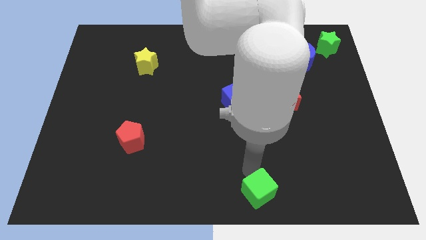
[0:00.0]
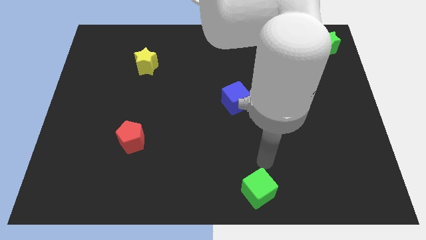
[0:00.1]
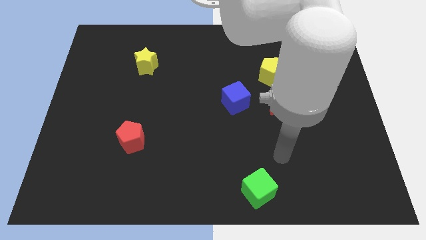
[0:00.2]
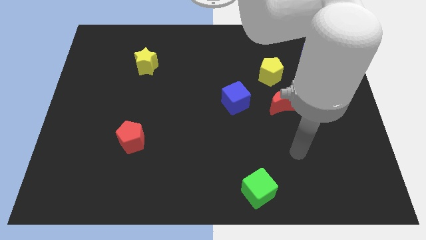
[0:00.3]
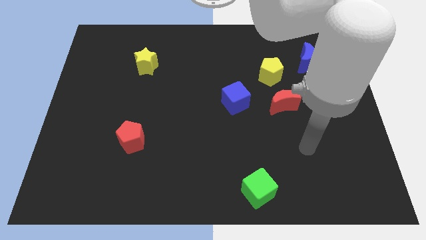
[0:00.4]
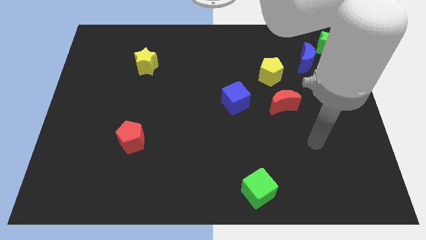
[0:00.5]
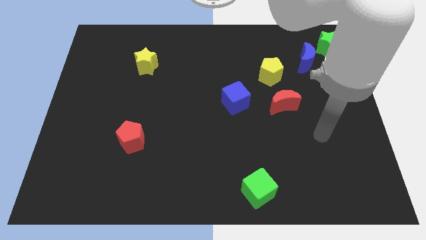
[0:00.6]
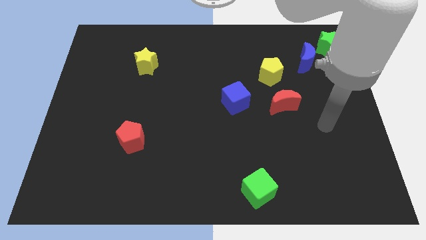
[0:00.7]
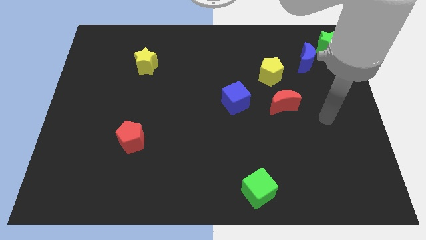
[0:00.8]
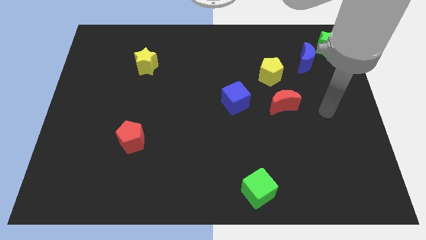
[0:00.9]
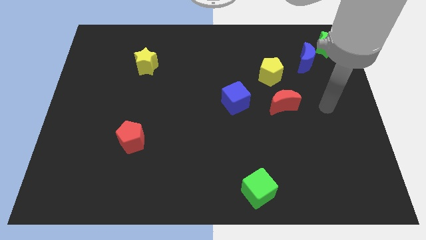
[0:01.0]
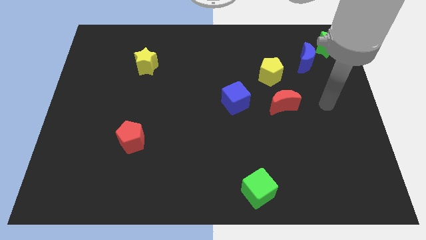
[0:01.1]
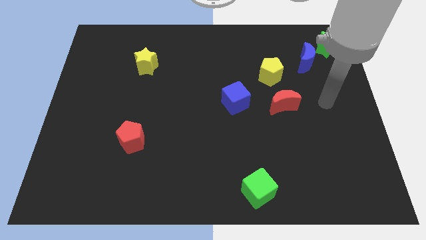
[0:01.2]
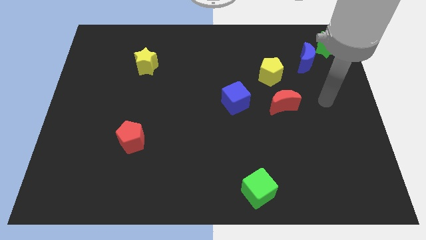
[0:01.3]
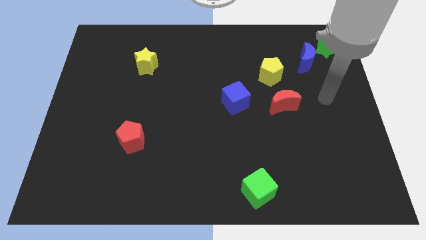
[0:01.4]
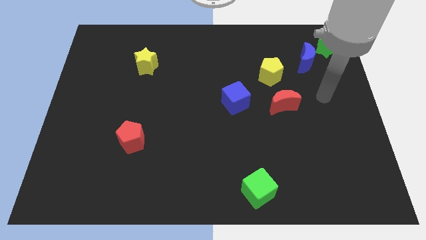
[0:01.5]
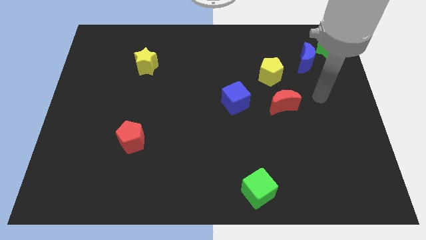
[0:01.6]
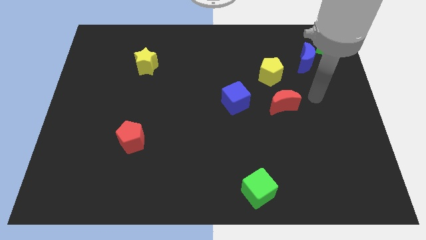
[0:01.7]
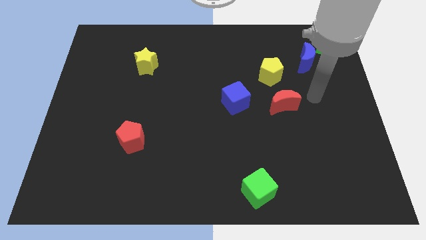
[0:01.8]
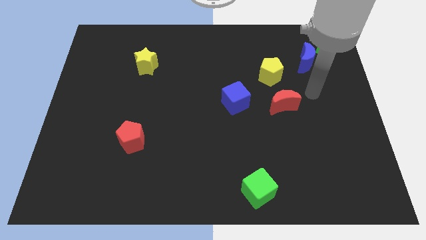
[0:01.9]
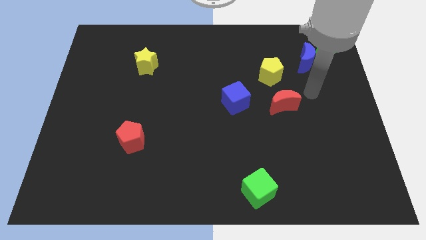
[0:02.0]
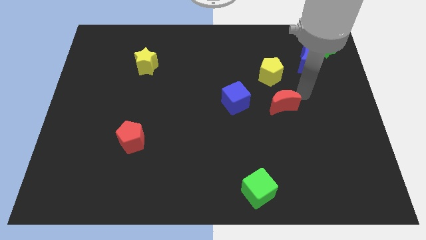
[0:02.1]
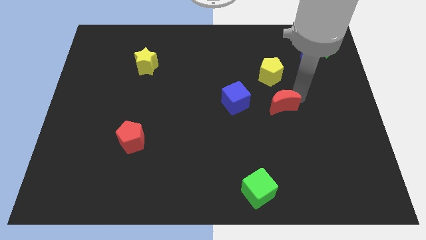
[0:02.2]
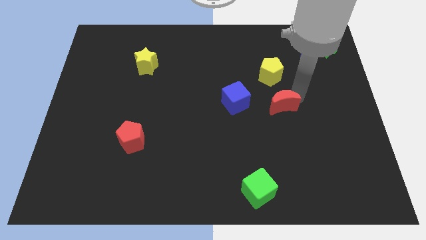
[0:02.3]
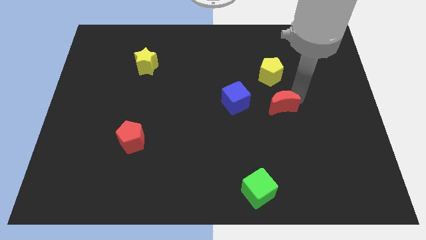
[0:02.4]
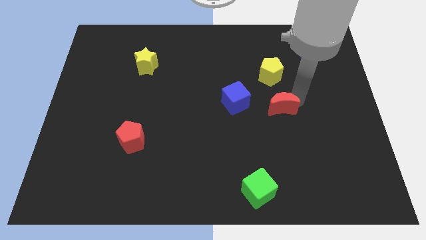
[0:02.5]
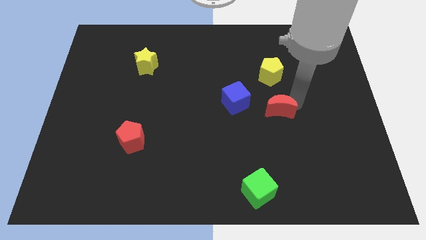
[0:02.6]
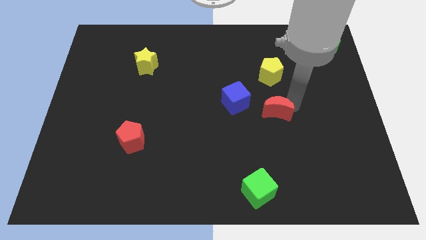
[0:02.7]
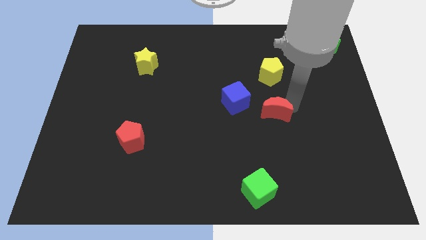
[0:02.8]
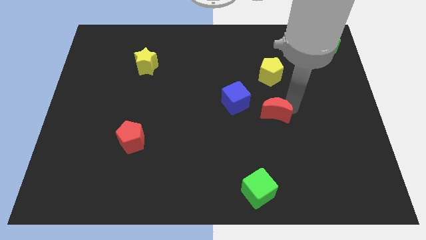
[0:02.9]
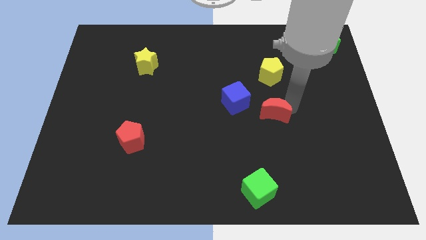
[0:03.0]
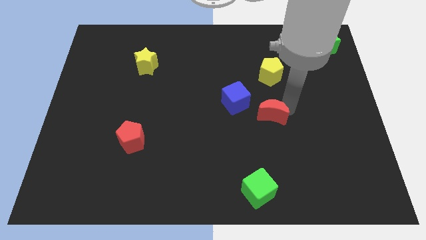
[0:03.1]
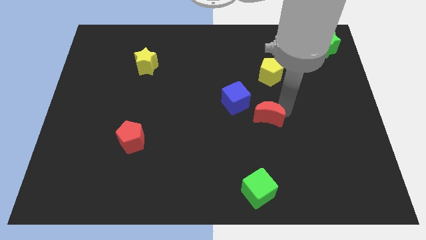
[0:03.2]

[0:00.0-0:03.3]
place the red crescent in between the yellow pentagon and green cube

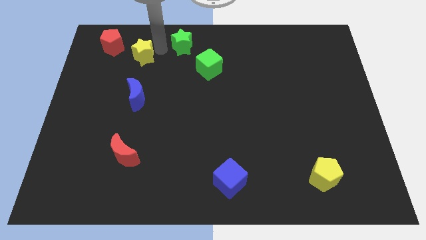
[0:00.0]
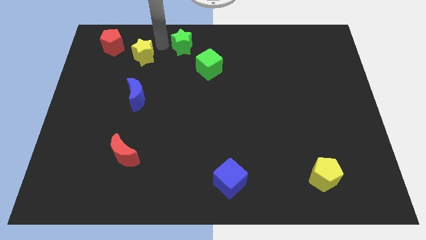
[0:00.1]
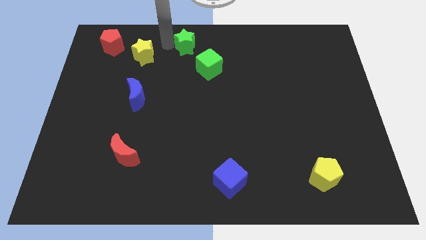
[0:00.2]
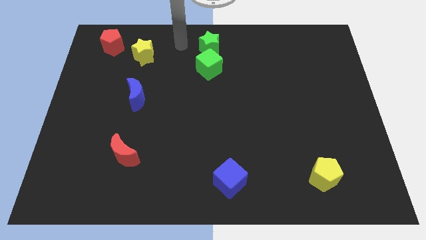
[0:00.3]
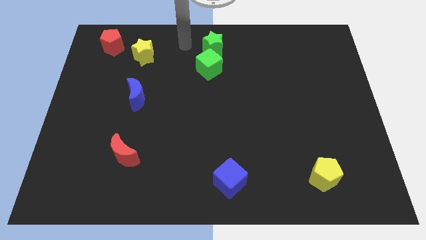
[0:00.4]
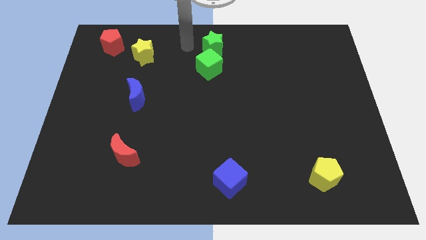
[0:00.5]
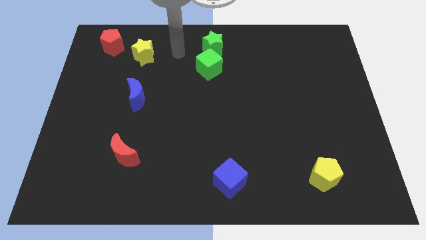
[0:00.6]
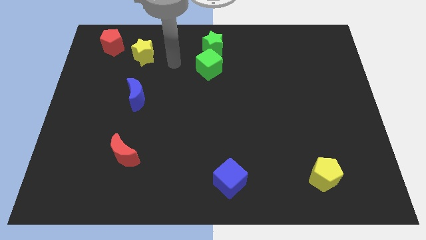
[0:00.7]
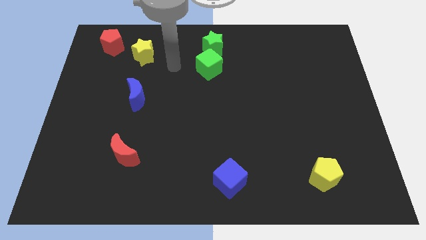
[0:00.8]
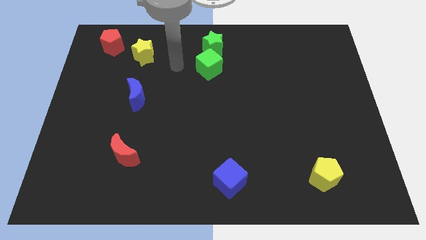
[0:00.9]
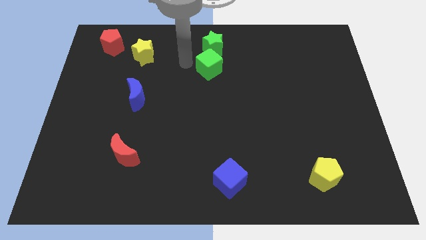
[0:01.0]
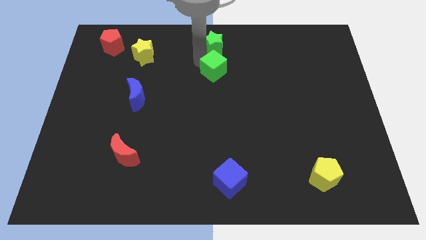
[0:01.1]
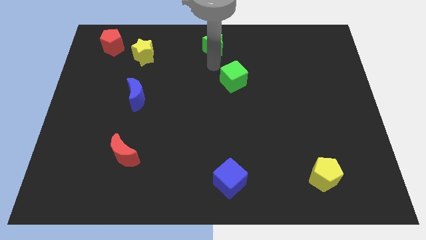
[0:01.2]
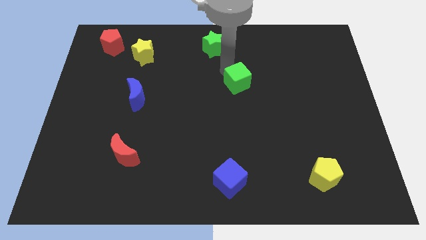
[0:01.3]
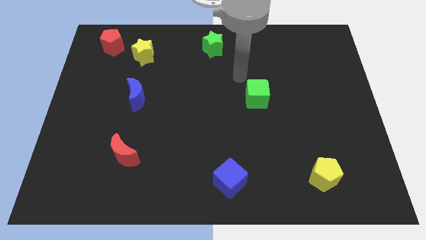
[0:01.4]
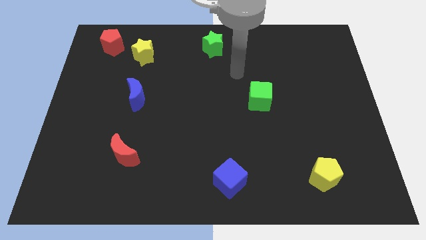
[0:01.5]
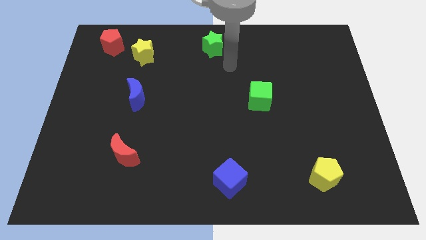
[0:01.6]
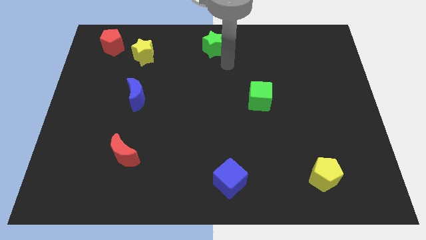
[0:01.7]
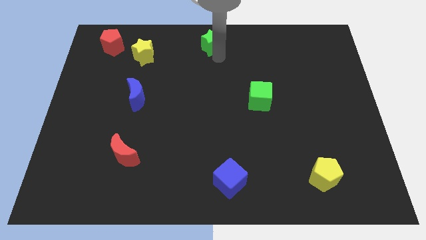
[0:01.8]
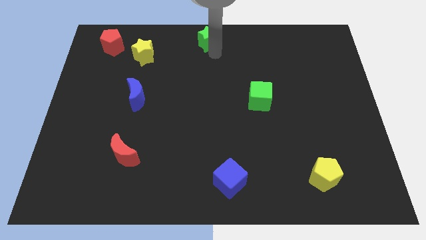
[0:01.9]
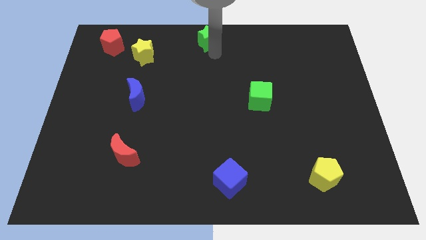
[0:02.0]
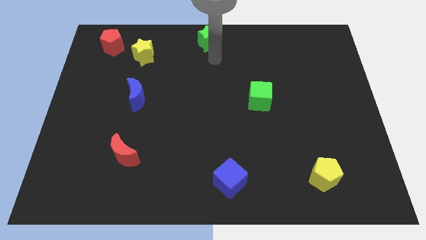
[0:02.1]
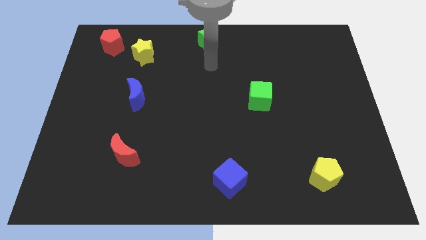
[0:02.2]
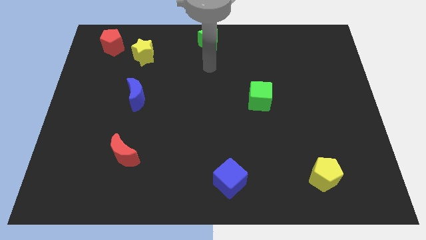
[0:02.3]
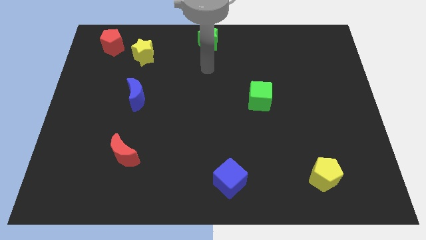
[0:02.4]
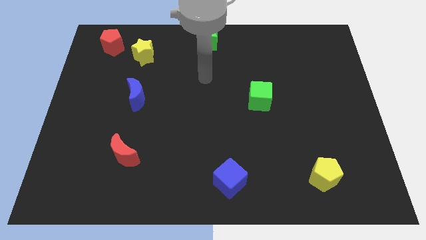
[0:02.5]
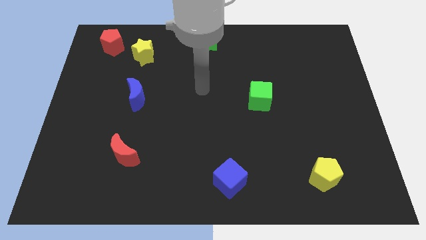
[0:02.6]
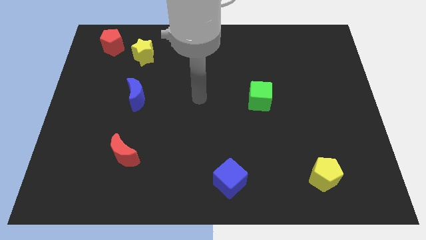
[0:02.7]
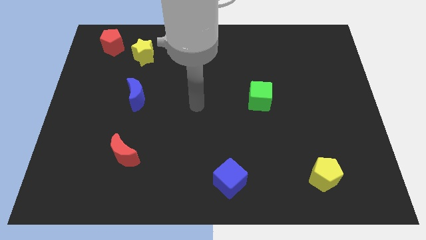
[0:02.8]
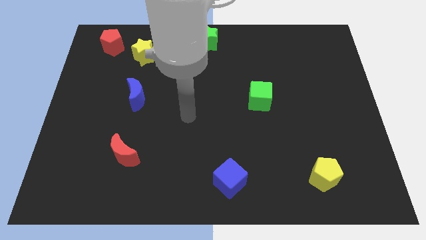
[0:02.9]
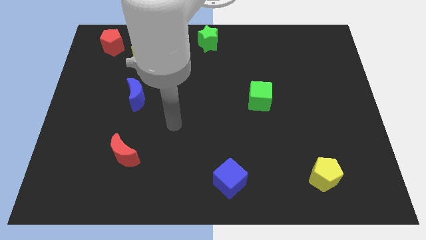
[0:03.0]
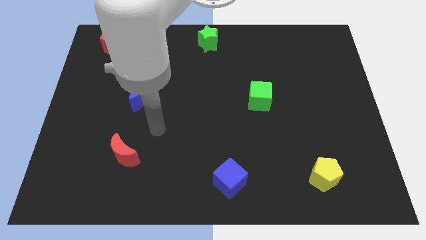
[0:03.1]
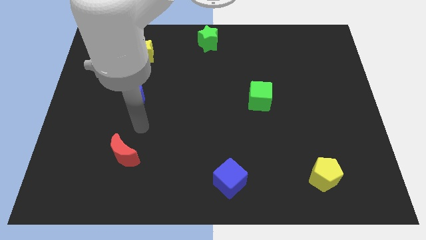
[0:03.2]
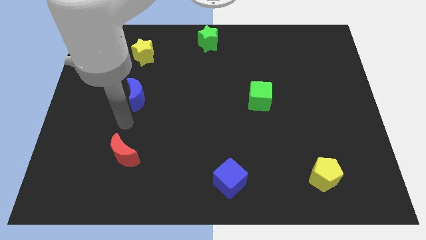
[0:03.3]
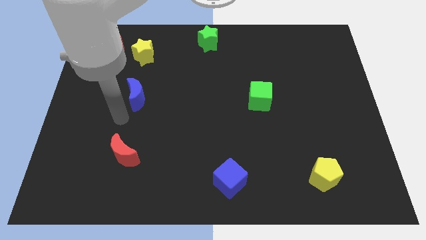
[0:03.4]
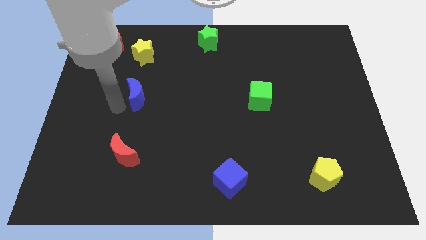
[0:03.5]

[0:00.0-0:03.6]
move your arm towards the left side of the blue moon

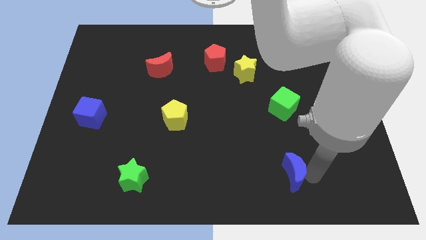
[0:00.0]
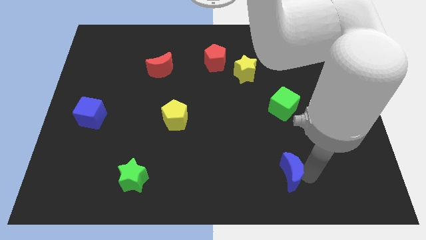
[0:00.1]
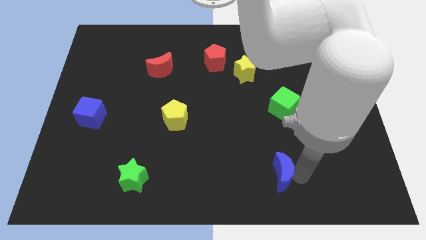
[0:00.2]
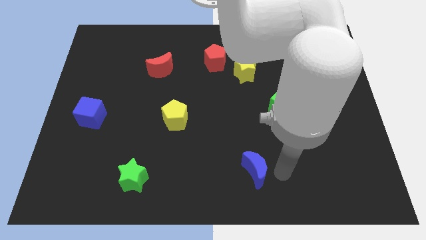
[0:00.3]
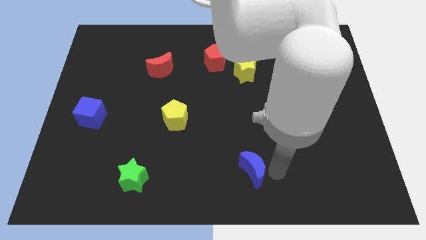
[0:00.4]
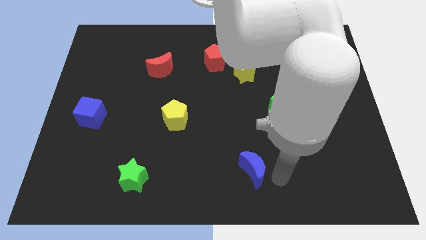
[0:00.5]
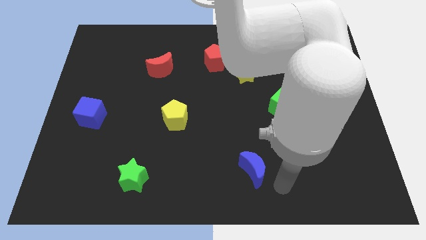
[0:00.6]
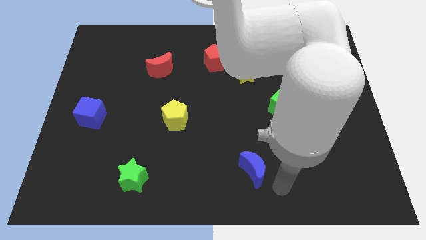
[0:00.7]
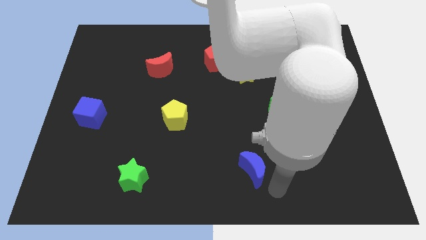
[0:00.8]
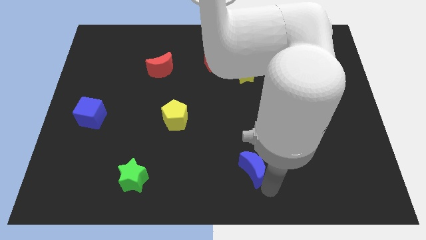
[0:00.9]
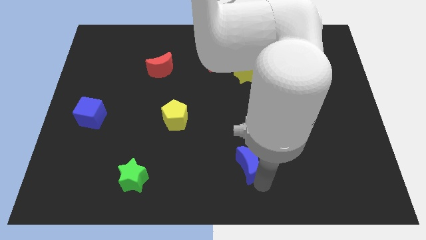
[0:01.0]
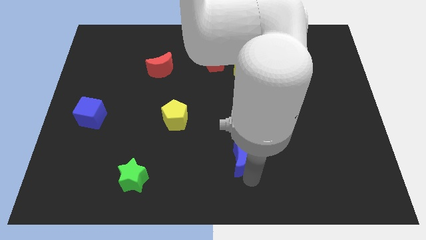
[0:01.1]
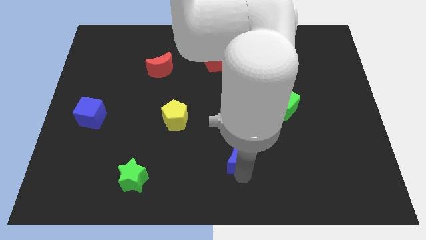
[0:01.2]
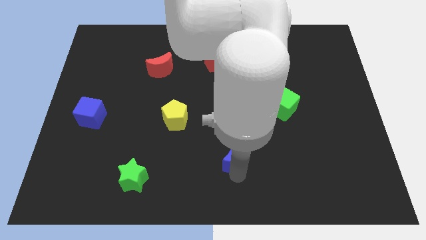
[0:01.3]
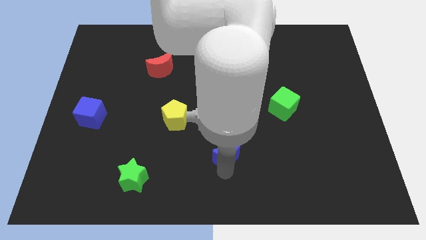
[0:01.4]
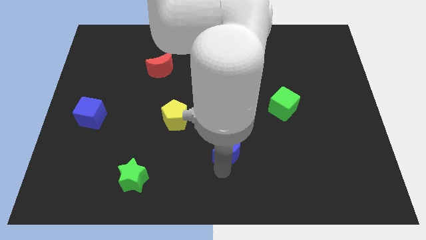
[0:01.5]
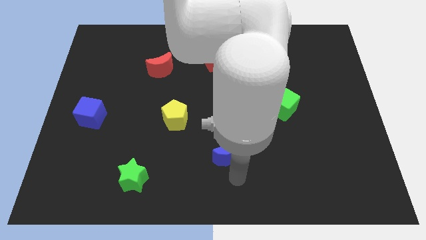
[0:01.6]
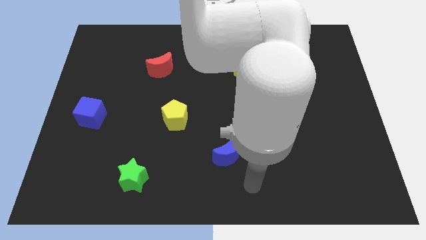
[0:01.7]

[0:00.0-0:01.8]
push the blue moon to the bottom right side of the yellow pentagon

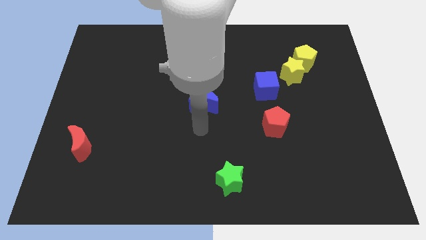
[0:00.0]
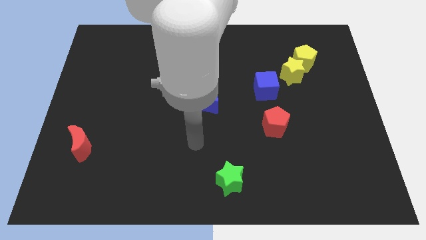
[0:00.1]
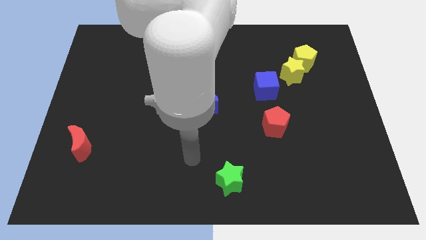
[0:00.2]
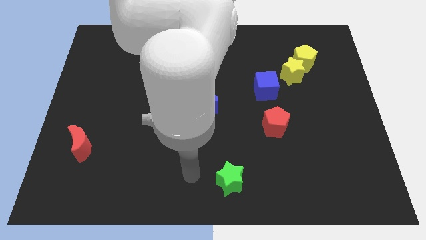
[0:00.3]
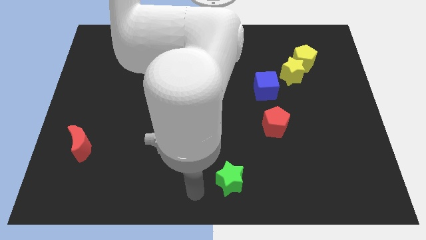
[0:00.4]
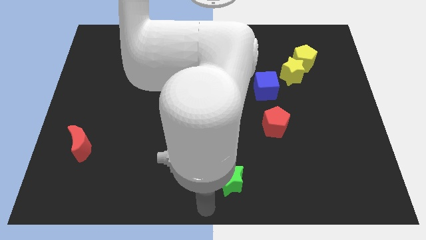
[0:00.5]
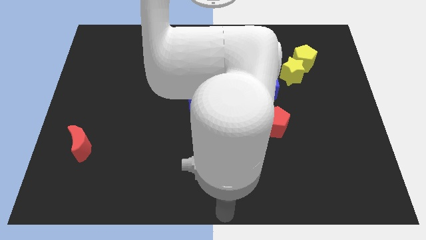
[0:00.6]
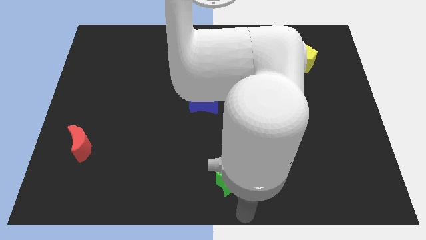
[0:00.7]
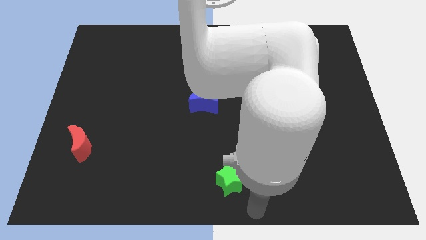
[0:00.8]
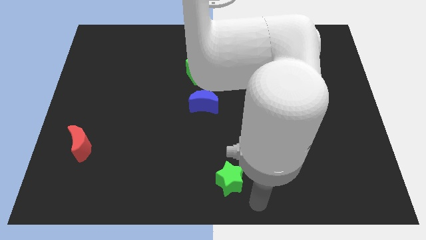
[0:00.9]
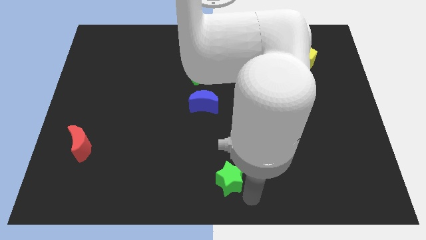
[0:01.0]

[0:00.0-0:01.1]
move your arm away from blue moon
